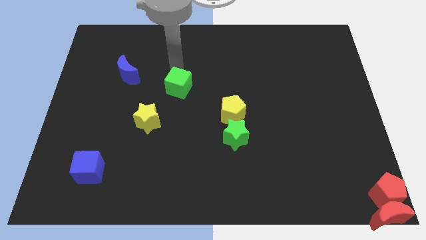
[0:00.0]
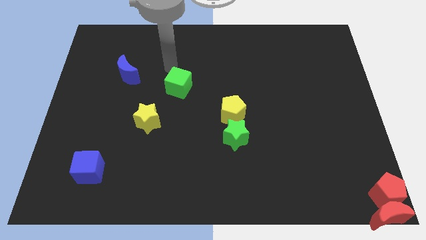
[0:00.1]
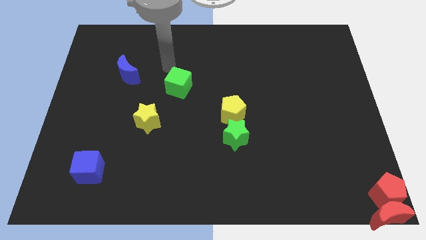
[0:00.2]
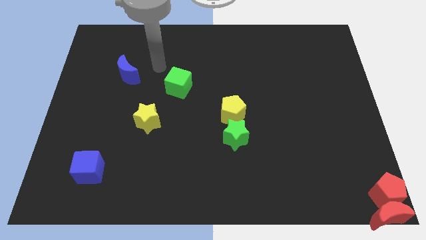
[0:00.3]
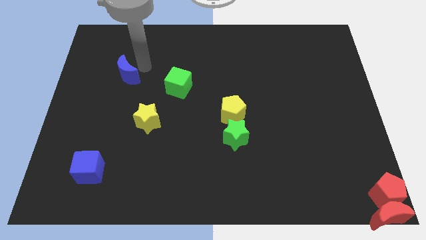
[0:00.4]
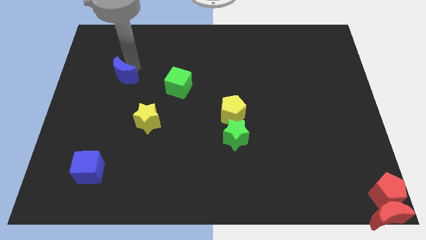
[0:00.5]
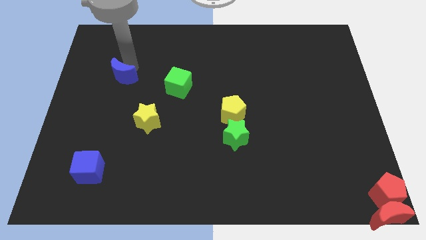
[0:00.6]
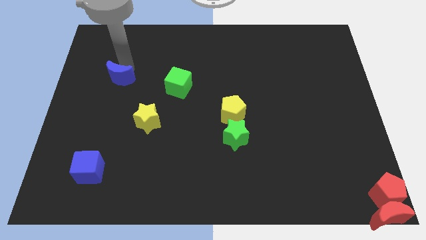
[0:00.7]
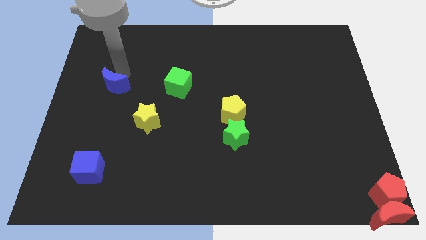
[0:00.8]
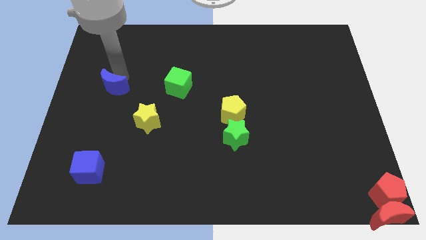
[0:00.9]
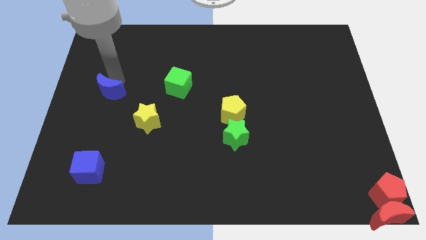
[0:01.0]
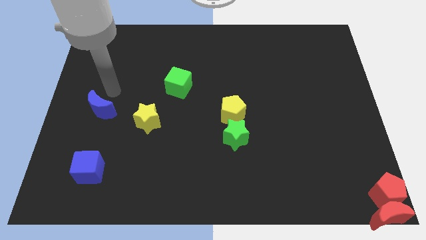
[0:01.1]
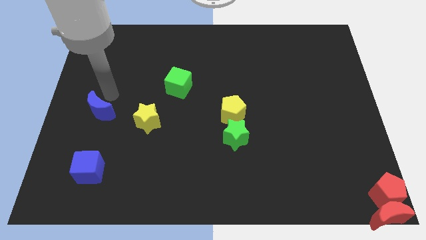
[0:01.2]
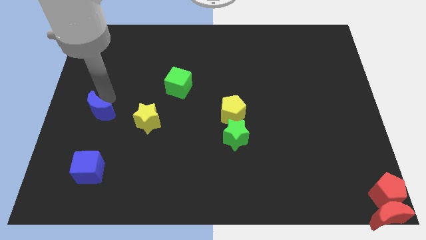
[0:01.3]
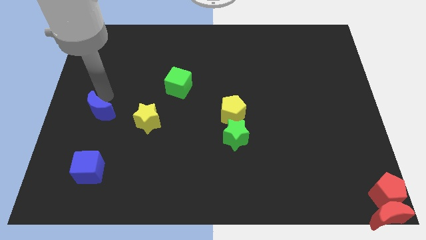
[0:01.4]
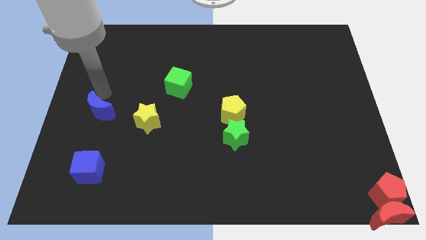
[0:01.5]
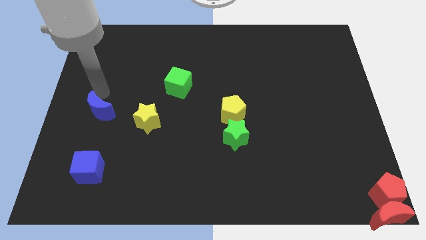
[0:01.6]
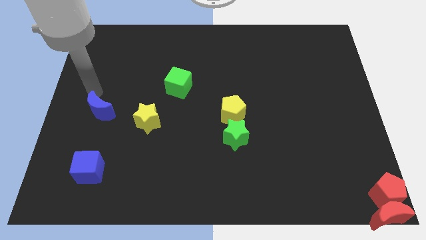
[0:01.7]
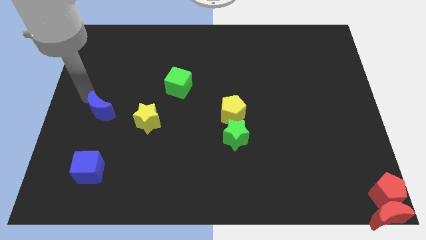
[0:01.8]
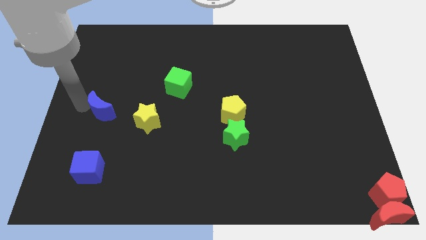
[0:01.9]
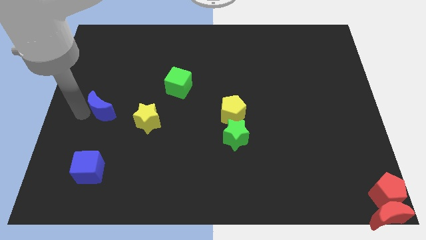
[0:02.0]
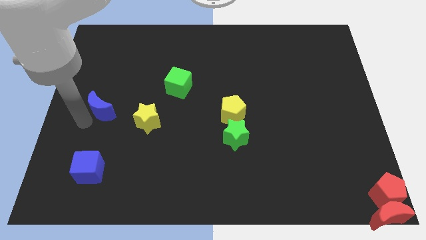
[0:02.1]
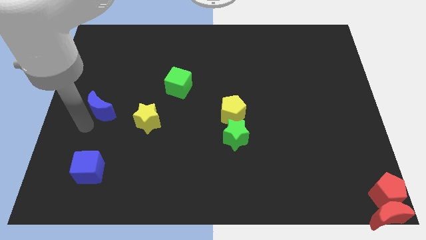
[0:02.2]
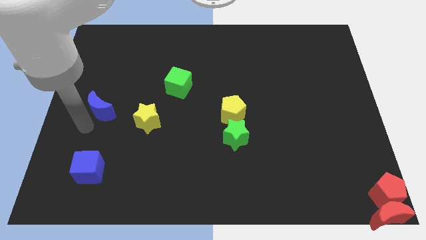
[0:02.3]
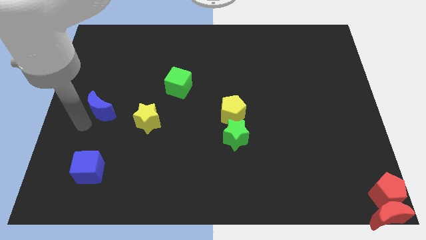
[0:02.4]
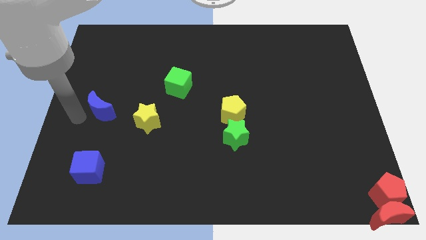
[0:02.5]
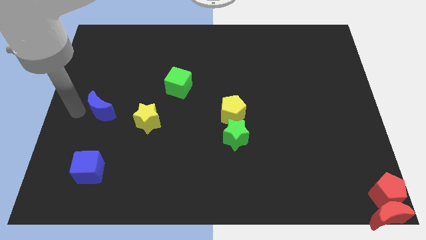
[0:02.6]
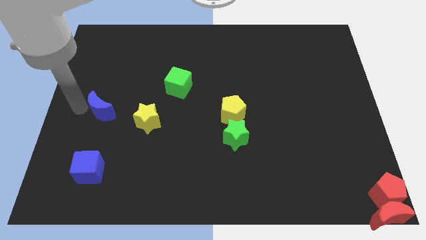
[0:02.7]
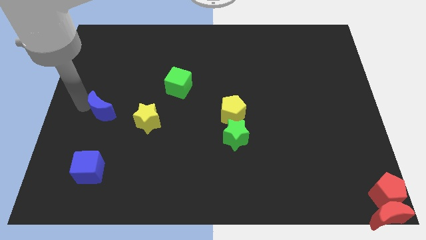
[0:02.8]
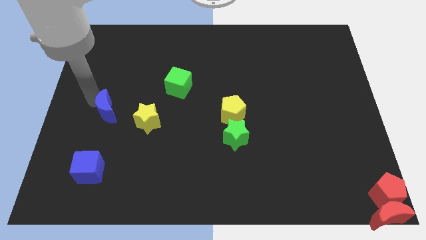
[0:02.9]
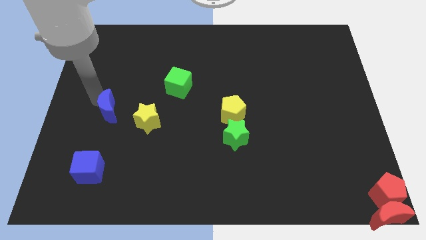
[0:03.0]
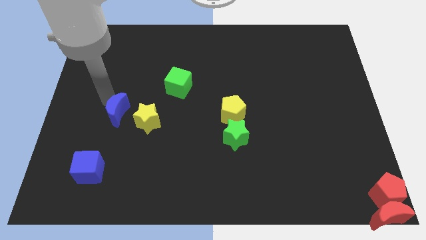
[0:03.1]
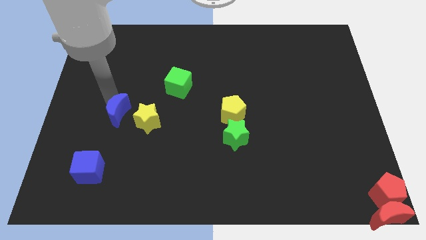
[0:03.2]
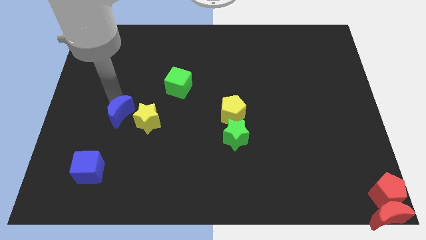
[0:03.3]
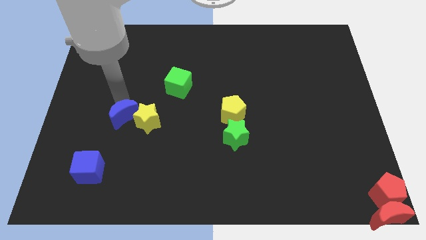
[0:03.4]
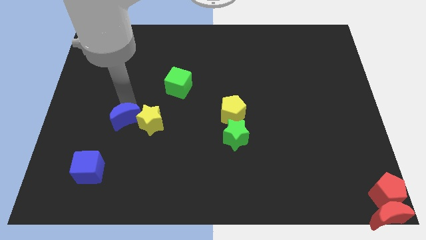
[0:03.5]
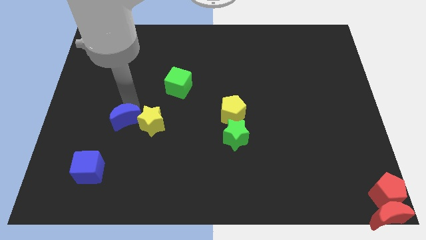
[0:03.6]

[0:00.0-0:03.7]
move the blue crescent to the left side of the yellow star

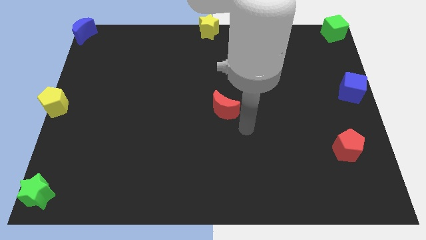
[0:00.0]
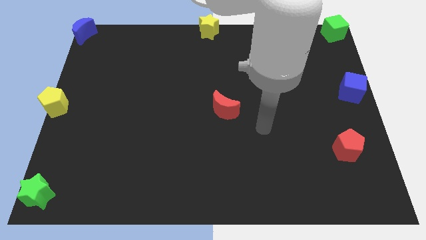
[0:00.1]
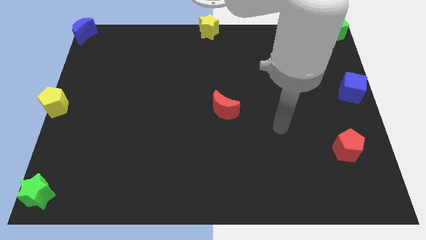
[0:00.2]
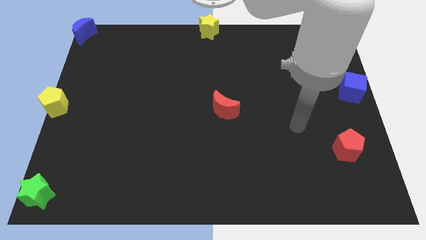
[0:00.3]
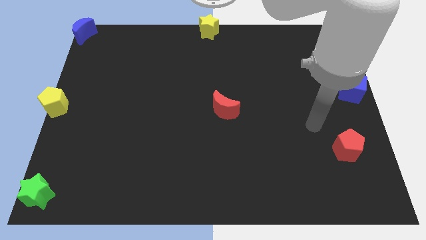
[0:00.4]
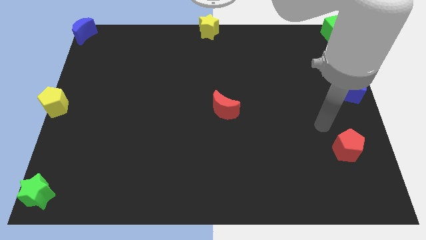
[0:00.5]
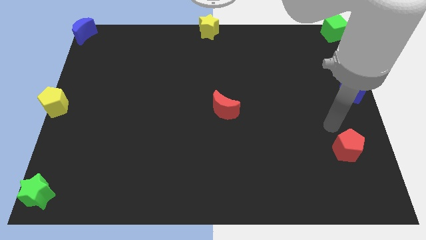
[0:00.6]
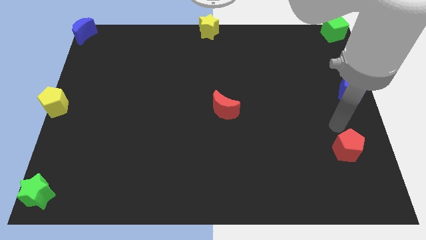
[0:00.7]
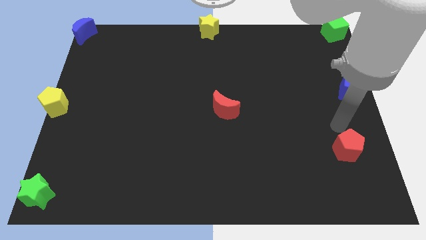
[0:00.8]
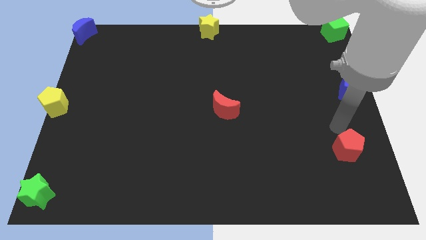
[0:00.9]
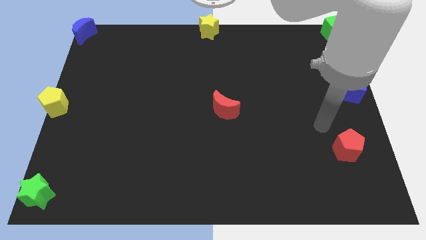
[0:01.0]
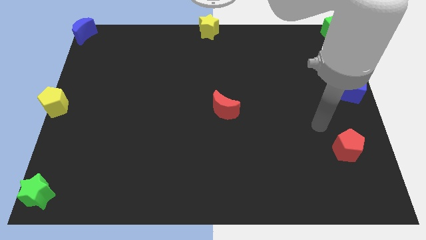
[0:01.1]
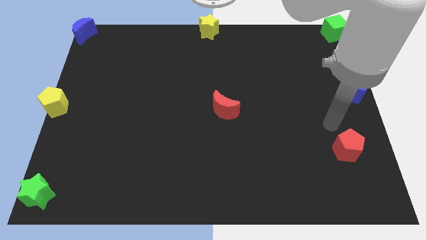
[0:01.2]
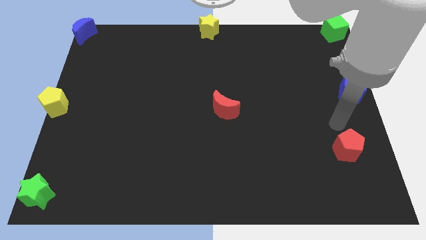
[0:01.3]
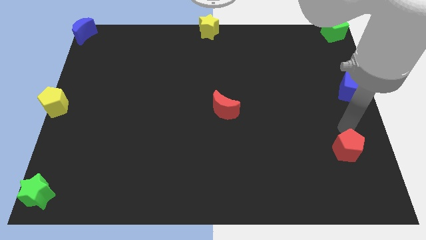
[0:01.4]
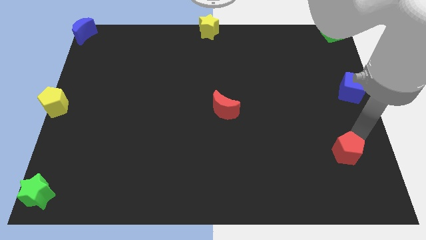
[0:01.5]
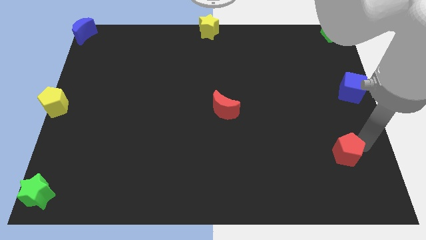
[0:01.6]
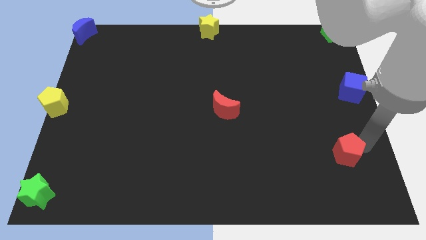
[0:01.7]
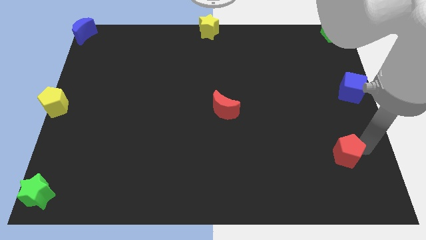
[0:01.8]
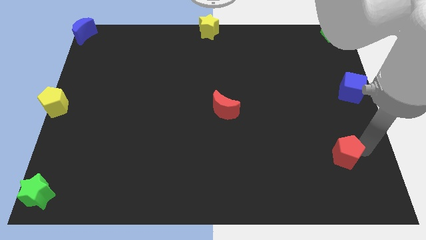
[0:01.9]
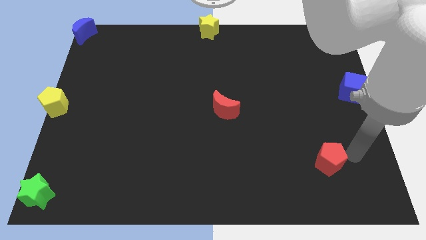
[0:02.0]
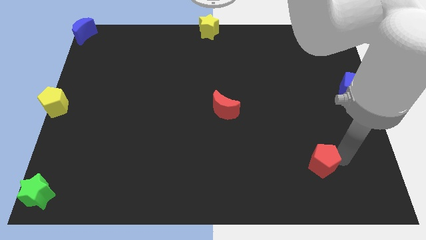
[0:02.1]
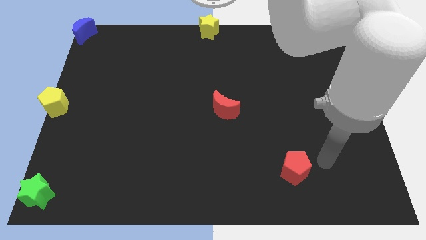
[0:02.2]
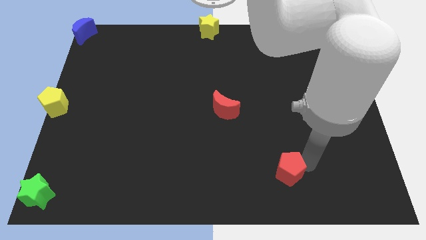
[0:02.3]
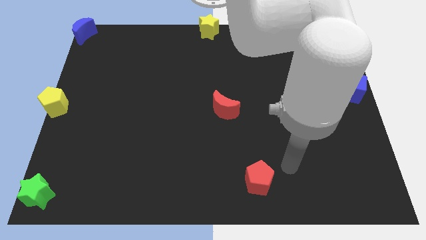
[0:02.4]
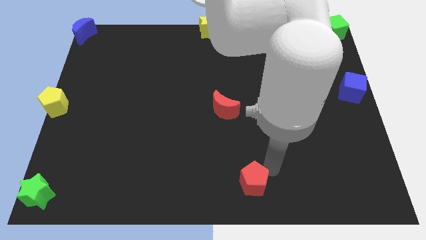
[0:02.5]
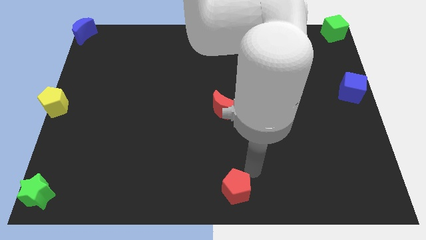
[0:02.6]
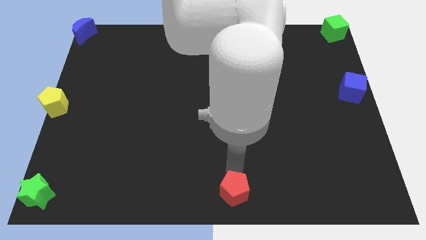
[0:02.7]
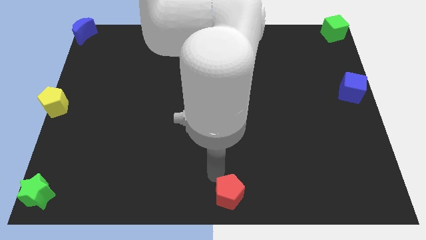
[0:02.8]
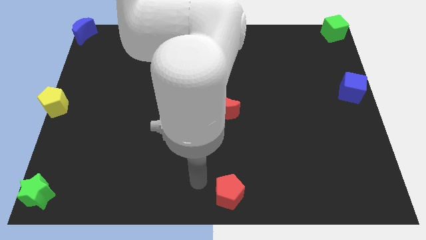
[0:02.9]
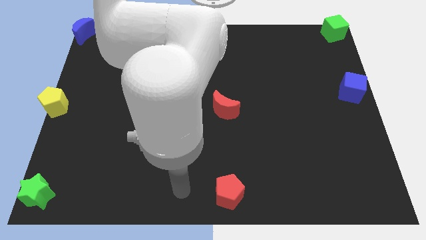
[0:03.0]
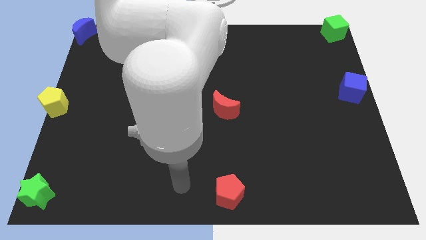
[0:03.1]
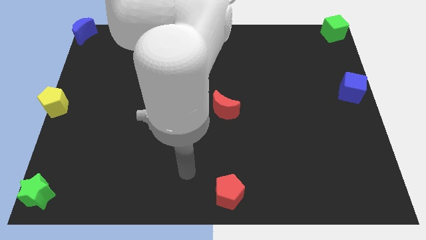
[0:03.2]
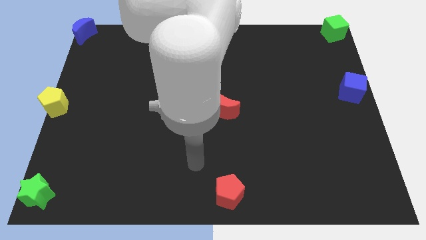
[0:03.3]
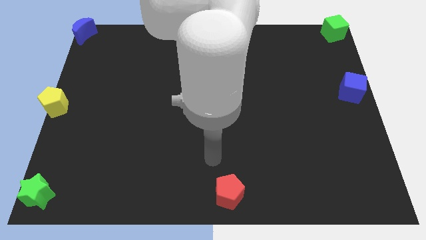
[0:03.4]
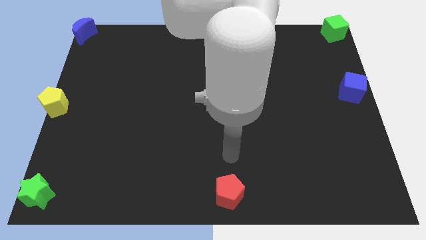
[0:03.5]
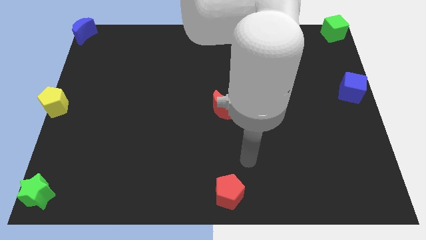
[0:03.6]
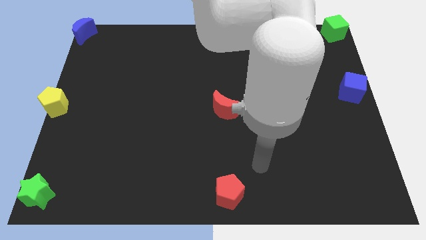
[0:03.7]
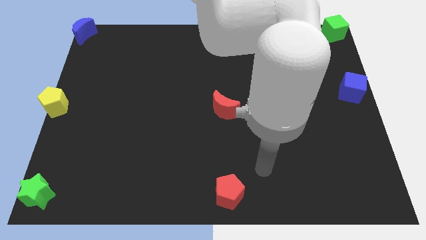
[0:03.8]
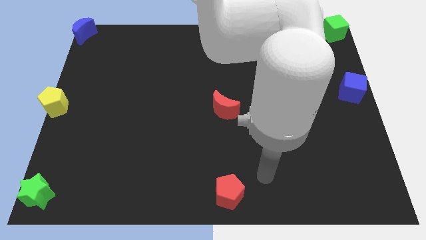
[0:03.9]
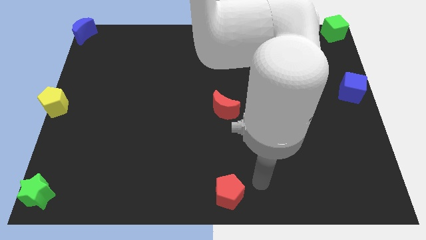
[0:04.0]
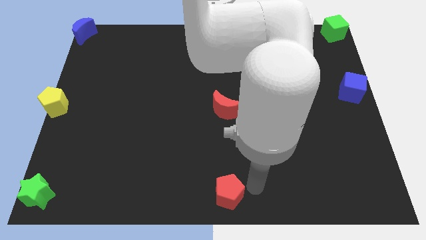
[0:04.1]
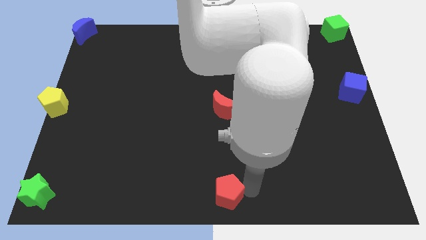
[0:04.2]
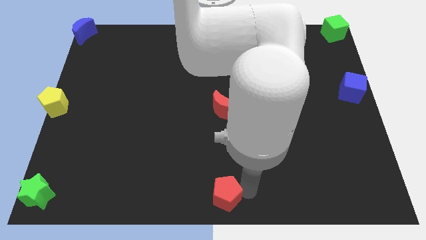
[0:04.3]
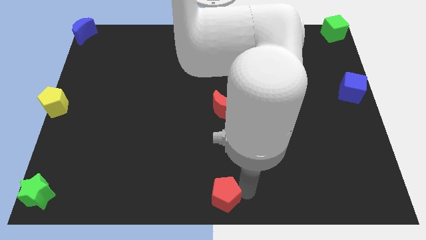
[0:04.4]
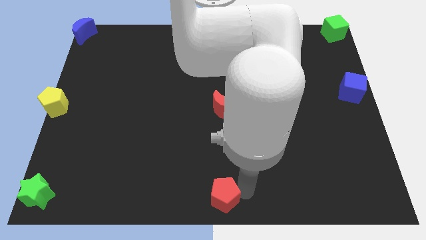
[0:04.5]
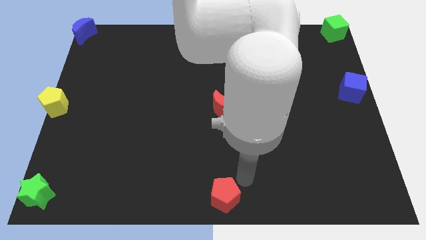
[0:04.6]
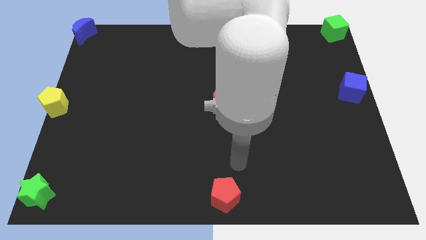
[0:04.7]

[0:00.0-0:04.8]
push the red pentagon to the bottom center of the board

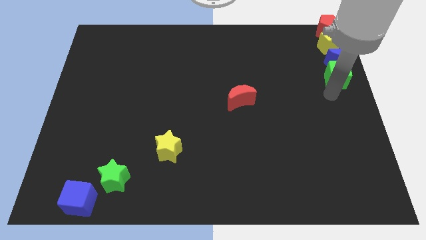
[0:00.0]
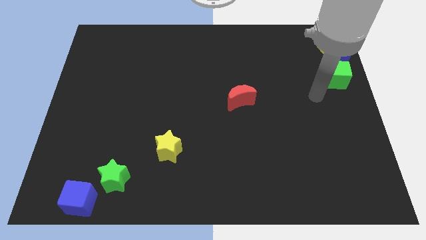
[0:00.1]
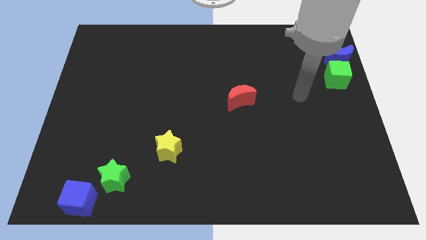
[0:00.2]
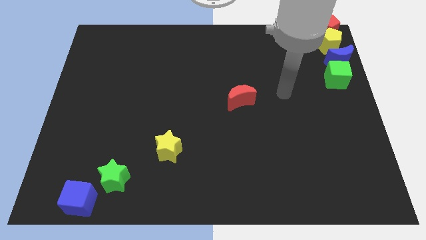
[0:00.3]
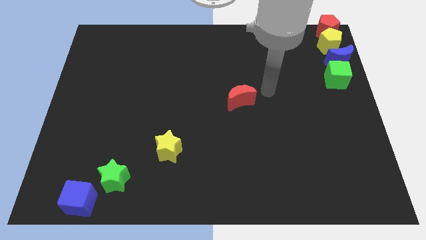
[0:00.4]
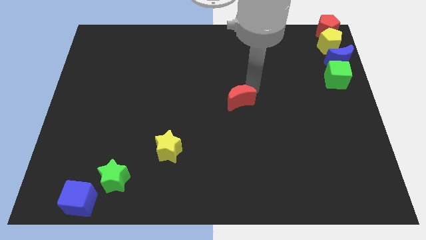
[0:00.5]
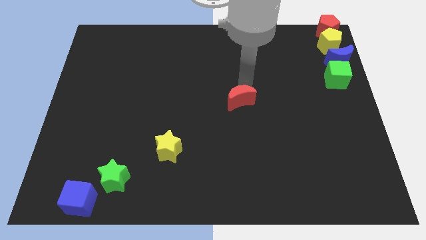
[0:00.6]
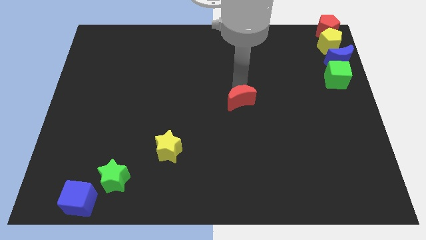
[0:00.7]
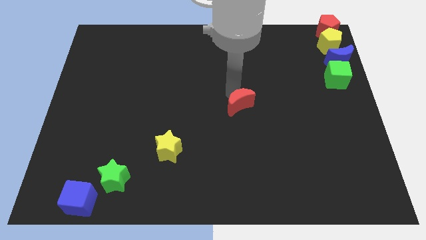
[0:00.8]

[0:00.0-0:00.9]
point your arm at the top of red moon
